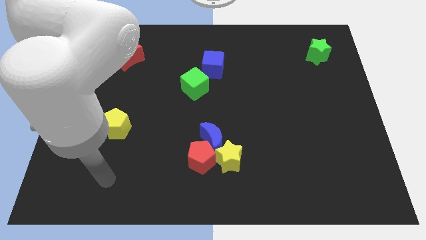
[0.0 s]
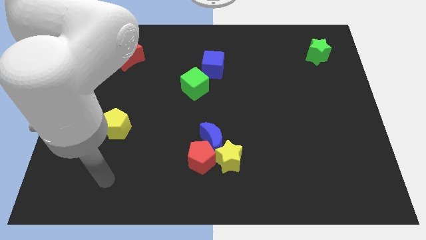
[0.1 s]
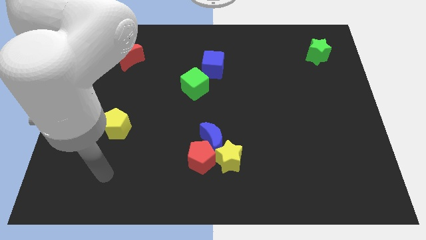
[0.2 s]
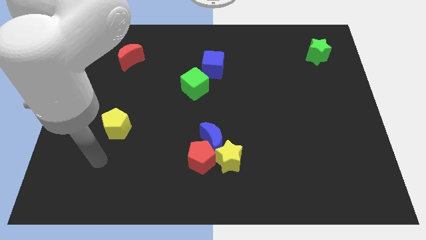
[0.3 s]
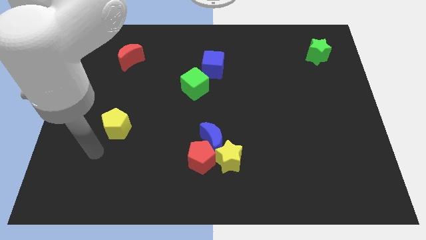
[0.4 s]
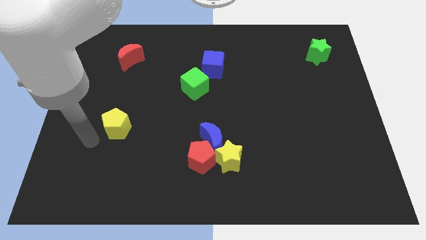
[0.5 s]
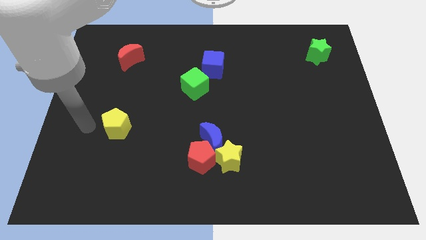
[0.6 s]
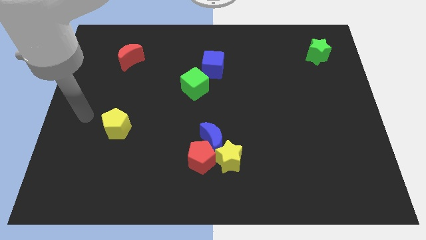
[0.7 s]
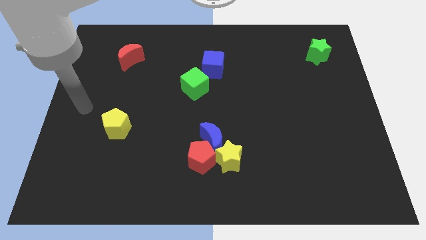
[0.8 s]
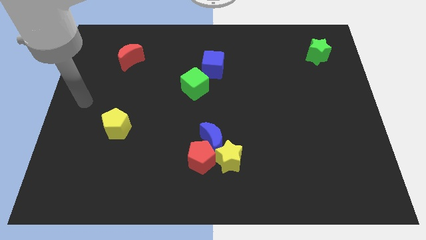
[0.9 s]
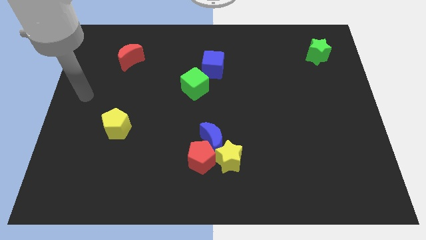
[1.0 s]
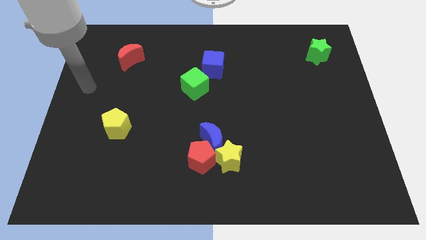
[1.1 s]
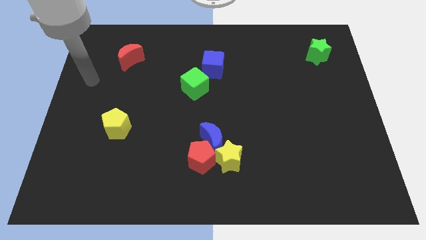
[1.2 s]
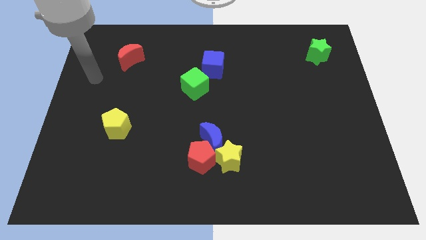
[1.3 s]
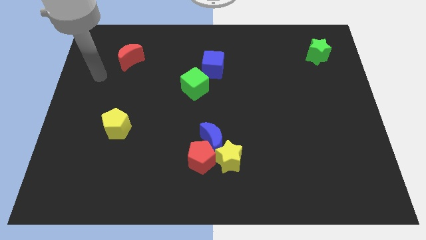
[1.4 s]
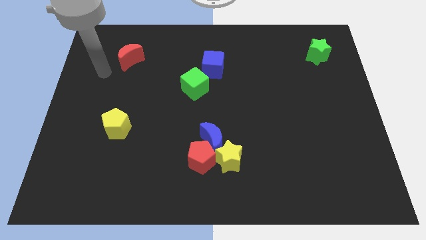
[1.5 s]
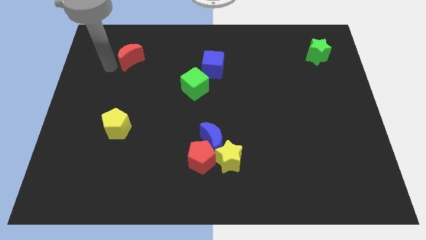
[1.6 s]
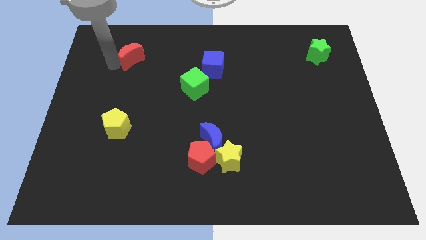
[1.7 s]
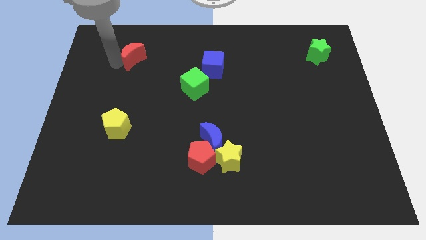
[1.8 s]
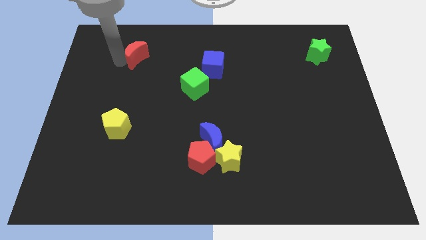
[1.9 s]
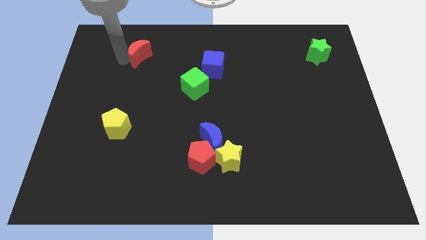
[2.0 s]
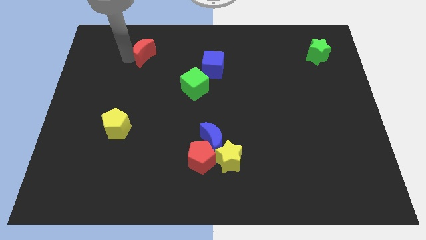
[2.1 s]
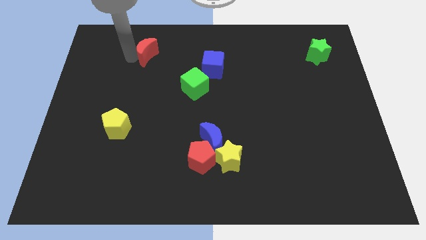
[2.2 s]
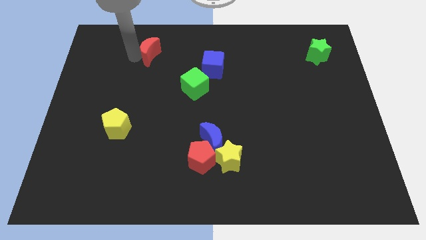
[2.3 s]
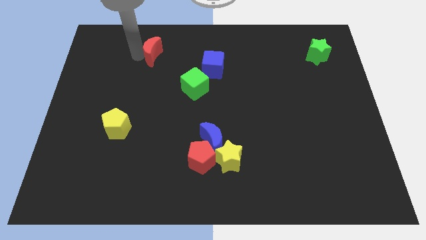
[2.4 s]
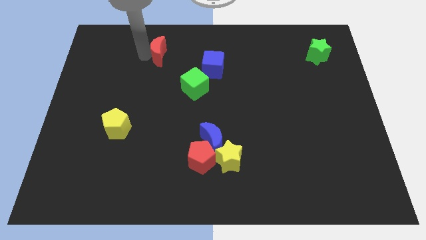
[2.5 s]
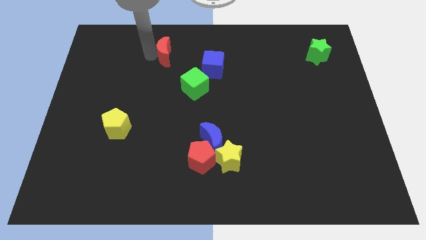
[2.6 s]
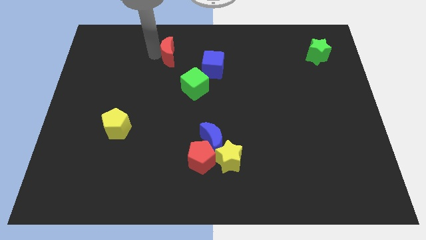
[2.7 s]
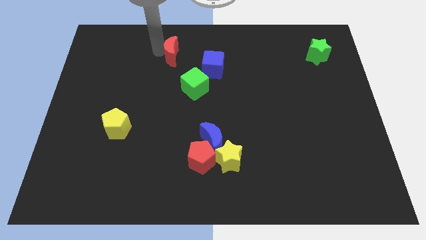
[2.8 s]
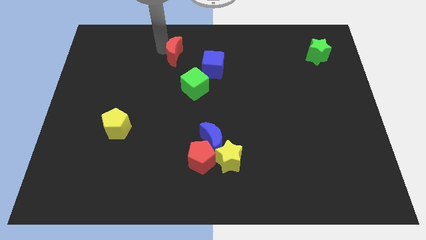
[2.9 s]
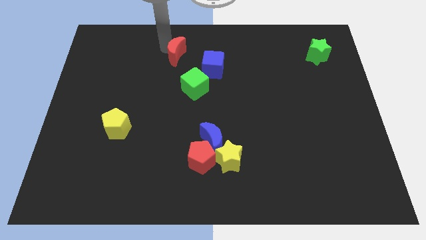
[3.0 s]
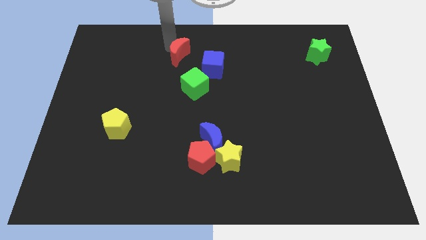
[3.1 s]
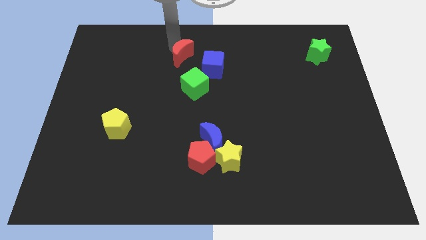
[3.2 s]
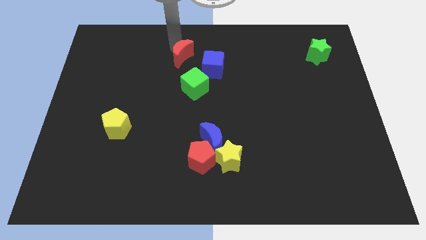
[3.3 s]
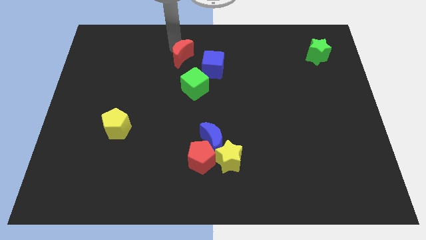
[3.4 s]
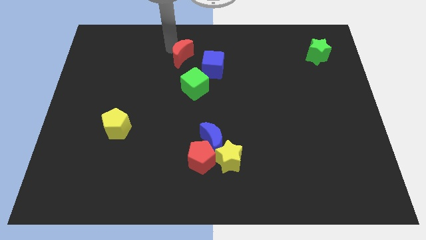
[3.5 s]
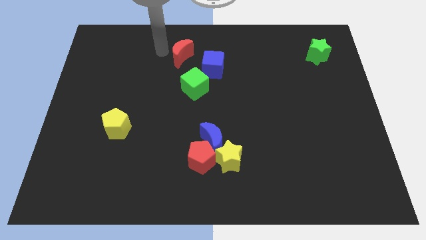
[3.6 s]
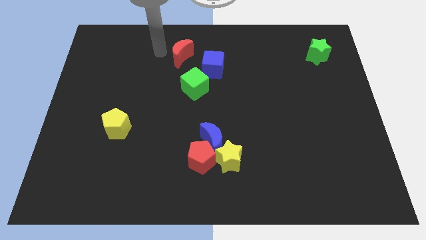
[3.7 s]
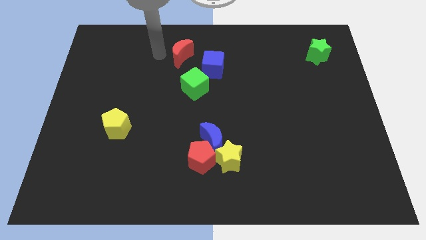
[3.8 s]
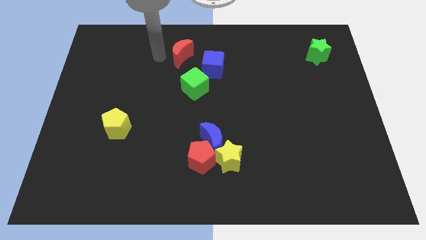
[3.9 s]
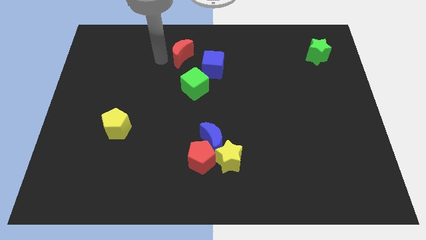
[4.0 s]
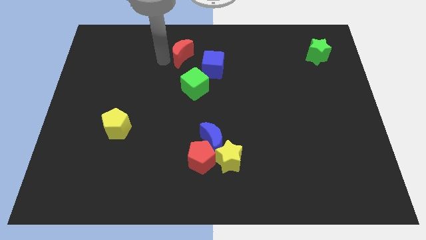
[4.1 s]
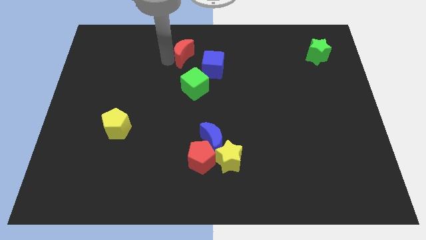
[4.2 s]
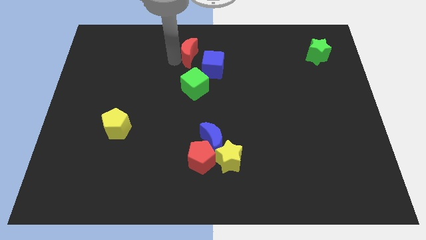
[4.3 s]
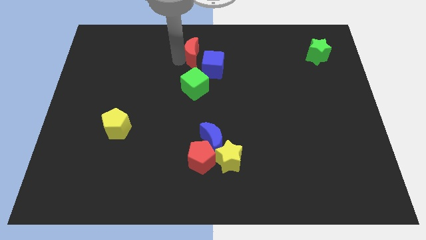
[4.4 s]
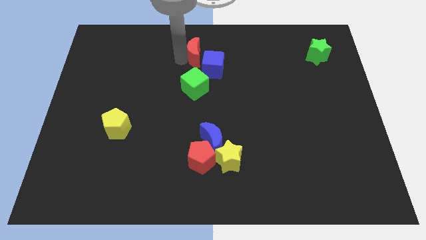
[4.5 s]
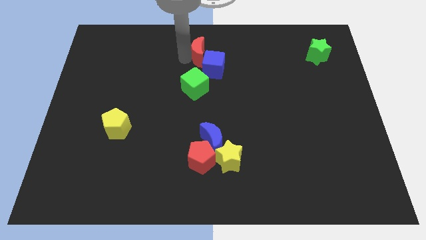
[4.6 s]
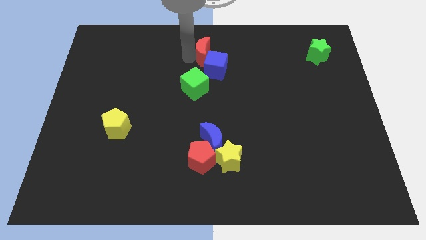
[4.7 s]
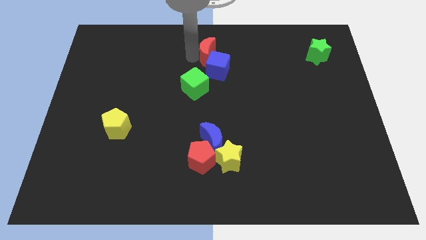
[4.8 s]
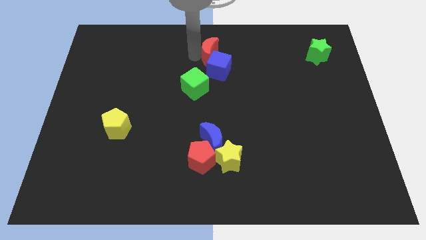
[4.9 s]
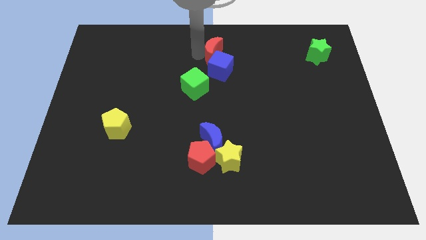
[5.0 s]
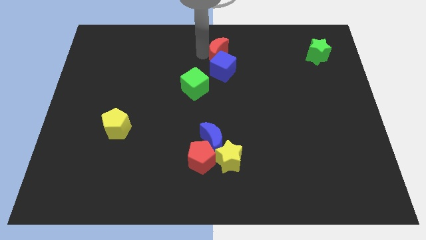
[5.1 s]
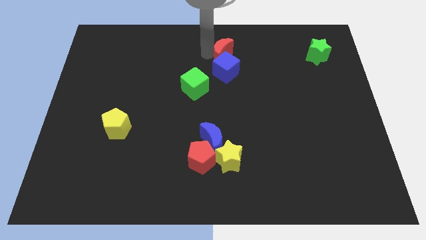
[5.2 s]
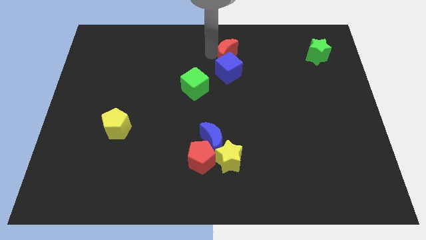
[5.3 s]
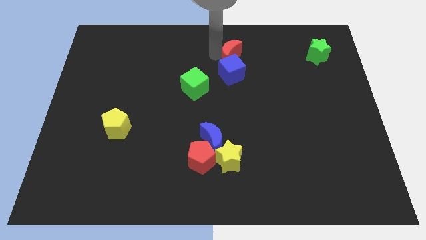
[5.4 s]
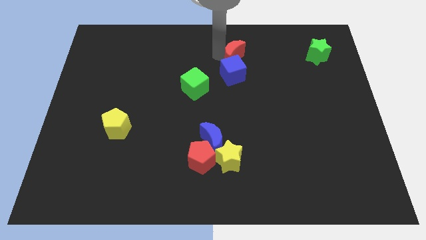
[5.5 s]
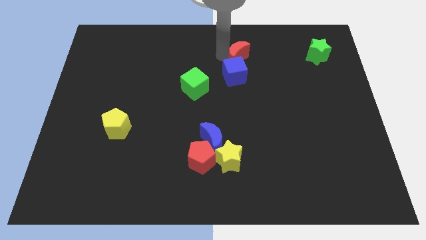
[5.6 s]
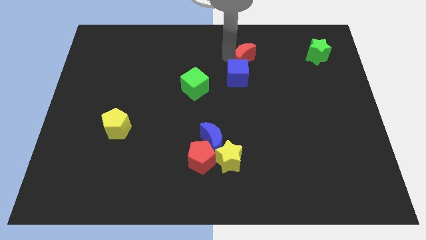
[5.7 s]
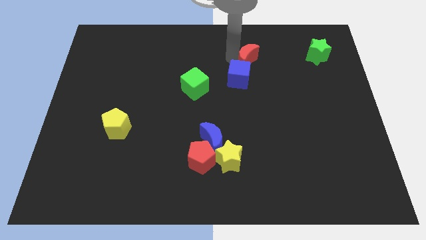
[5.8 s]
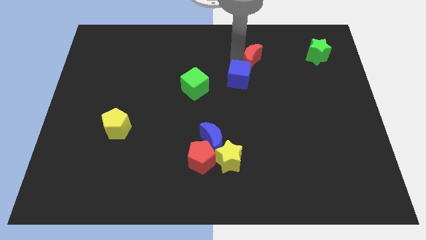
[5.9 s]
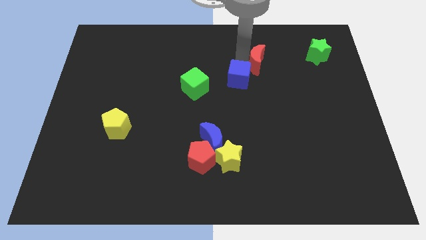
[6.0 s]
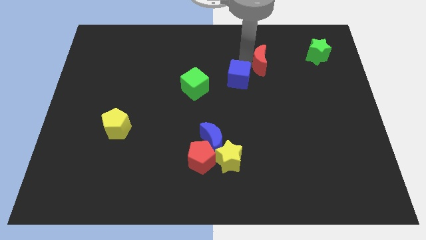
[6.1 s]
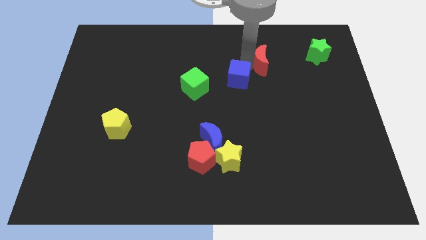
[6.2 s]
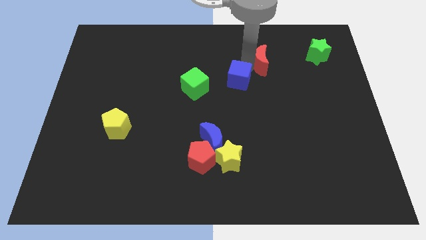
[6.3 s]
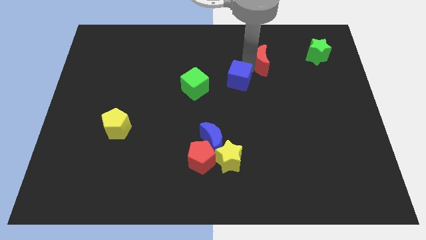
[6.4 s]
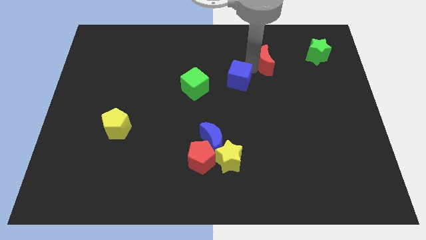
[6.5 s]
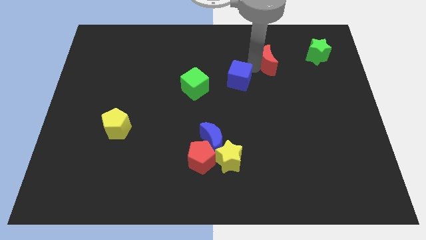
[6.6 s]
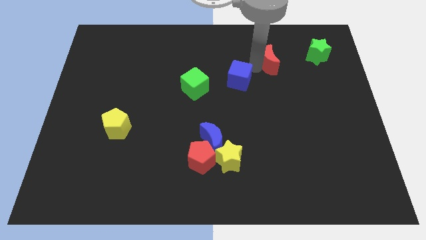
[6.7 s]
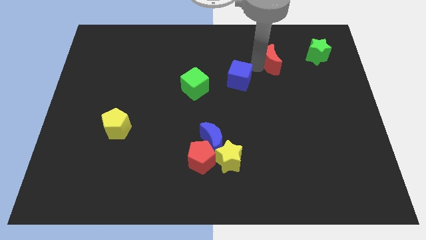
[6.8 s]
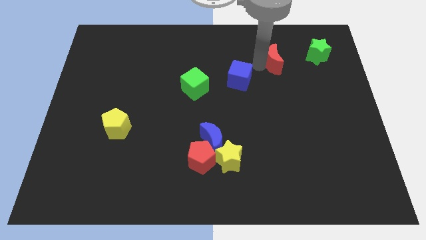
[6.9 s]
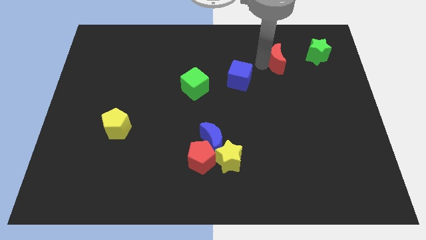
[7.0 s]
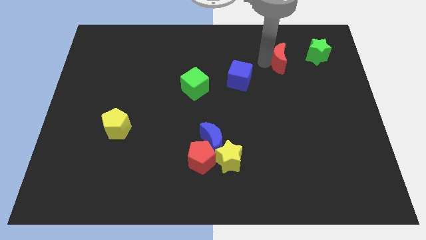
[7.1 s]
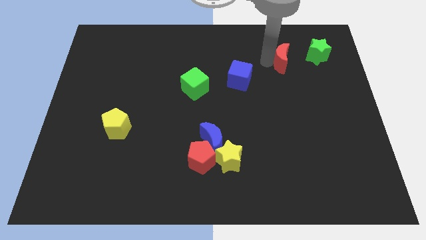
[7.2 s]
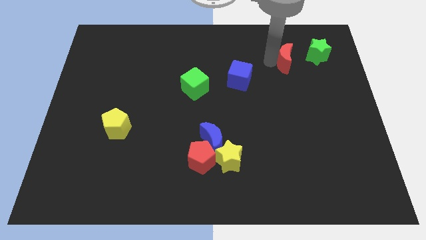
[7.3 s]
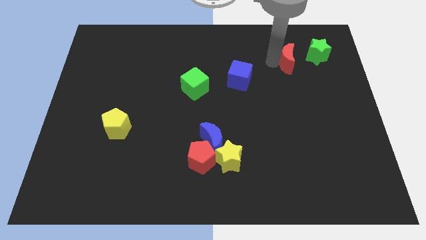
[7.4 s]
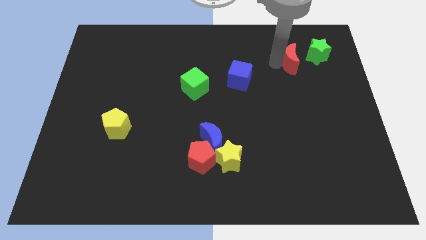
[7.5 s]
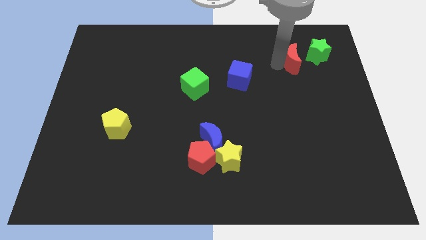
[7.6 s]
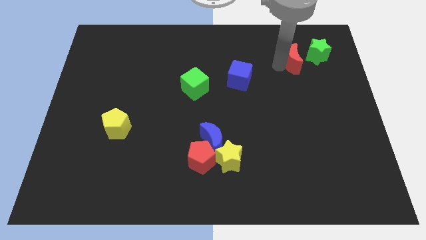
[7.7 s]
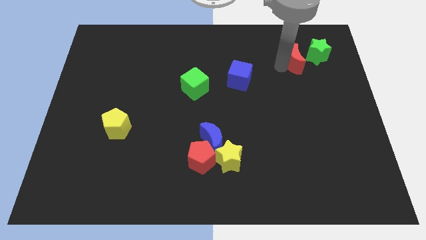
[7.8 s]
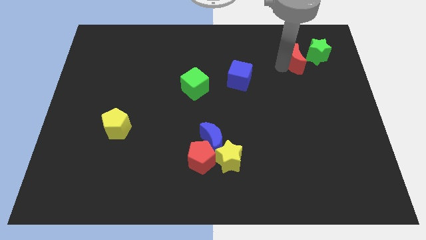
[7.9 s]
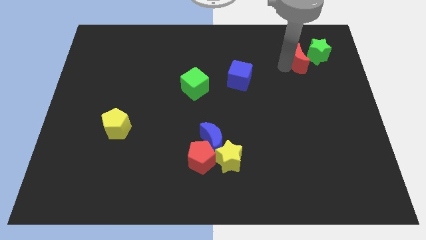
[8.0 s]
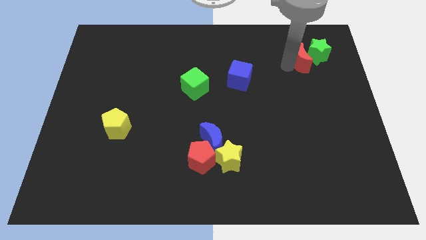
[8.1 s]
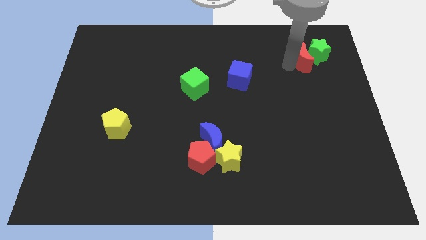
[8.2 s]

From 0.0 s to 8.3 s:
move the red moon to the green star

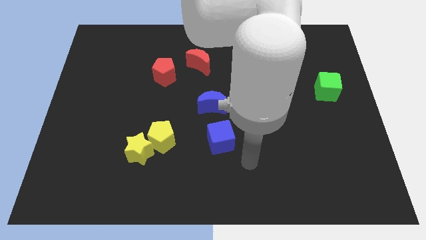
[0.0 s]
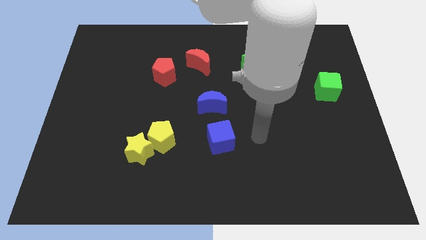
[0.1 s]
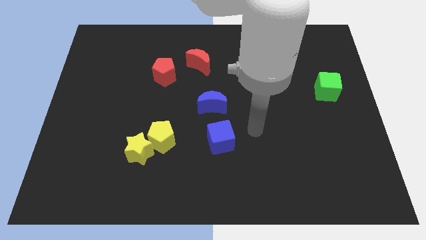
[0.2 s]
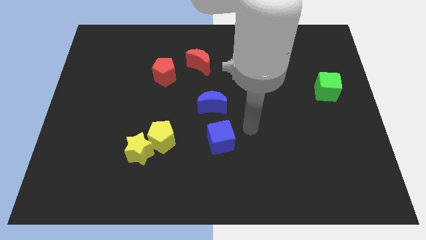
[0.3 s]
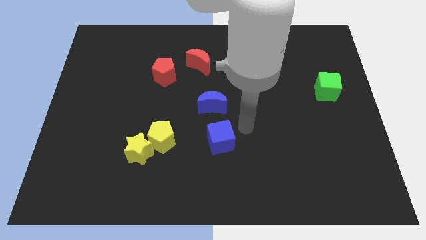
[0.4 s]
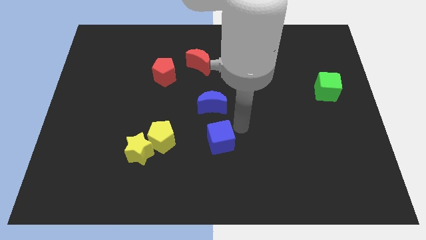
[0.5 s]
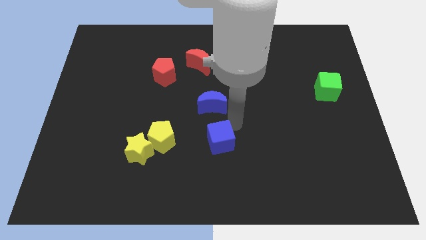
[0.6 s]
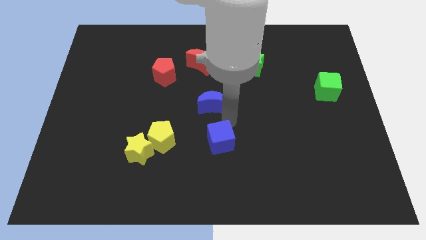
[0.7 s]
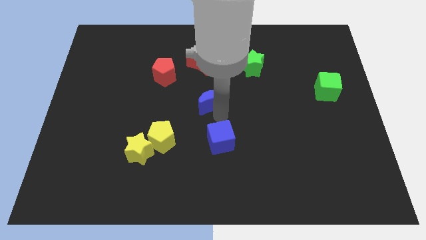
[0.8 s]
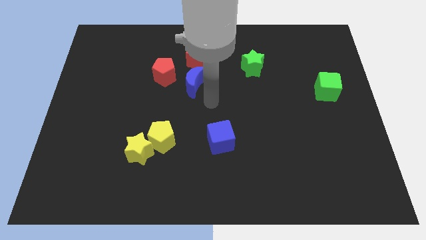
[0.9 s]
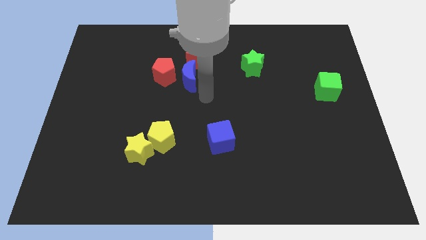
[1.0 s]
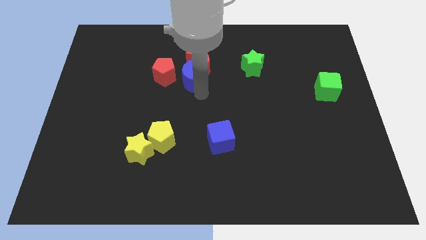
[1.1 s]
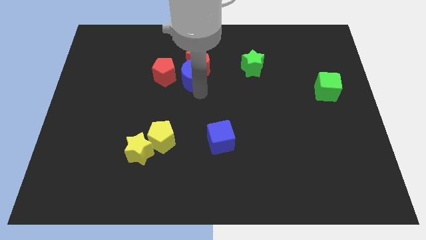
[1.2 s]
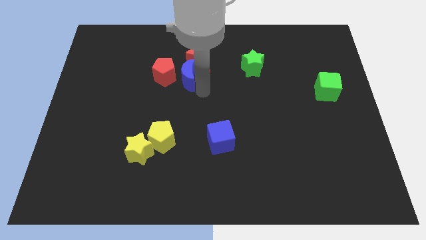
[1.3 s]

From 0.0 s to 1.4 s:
move the blue moon towards the red pentagon
